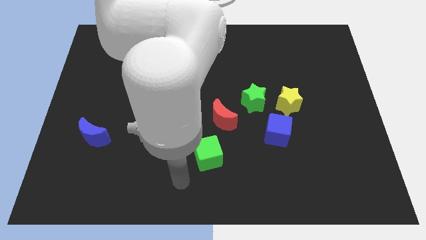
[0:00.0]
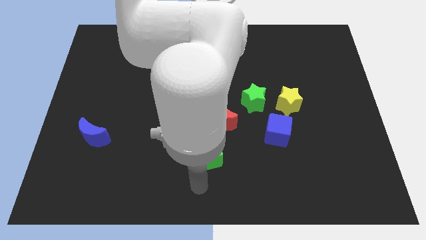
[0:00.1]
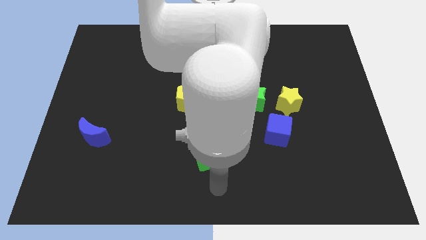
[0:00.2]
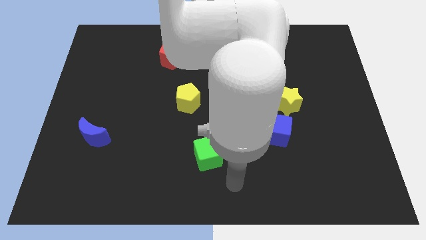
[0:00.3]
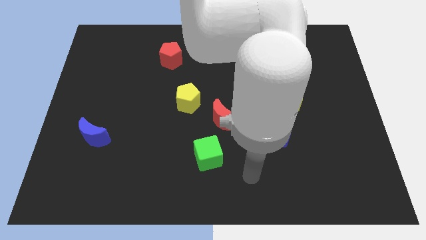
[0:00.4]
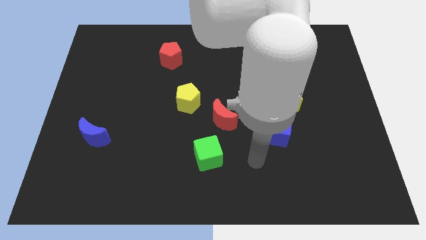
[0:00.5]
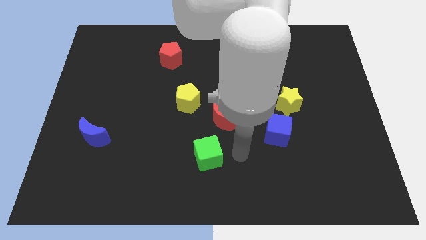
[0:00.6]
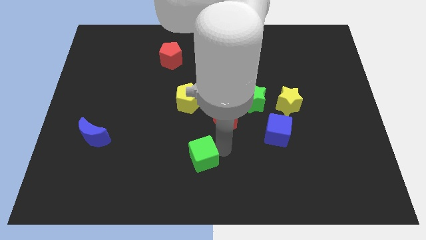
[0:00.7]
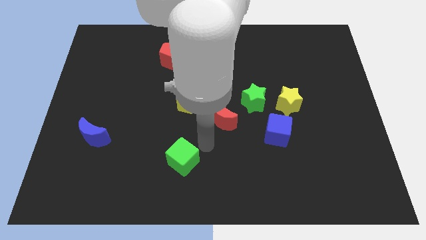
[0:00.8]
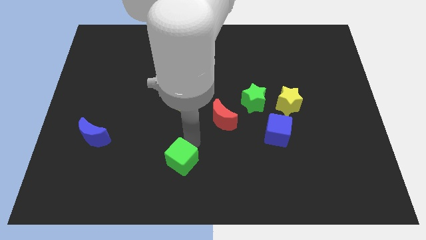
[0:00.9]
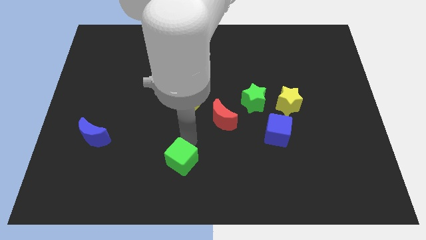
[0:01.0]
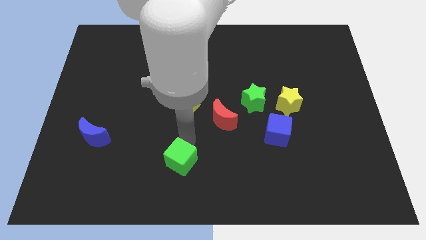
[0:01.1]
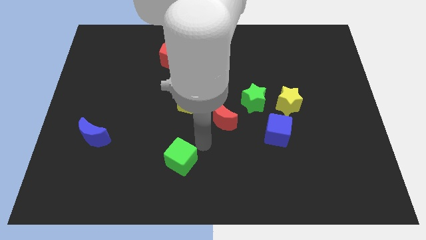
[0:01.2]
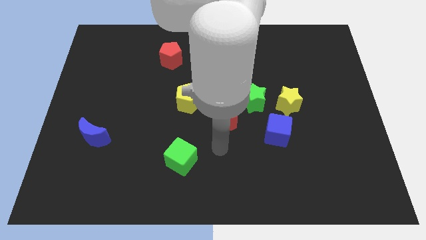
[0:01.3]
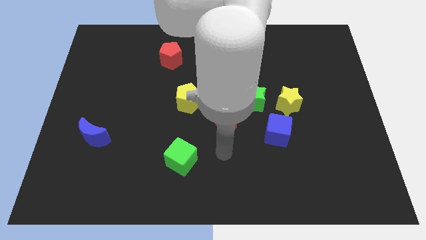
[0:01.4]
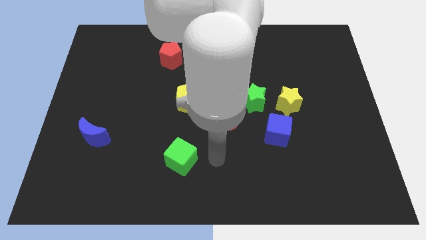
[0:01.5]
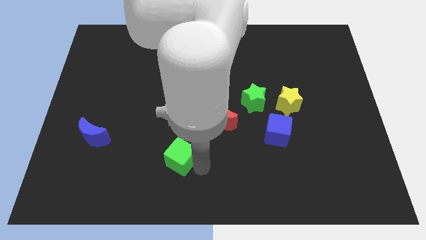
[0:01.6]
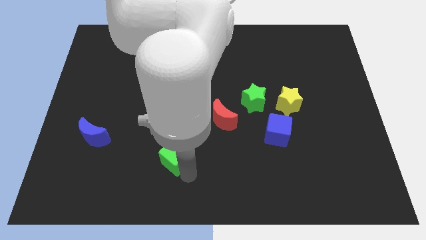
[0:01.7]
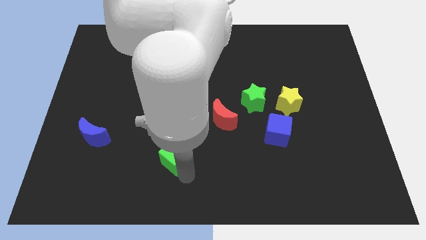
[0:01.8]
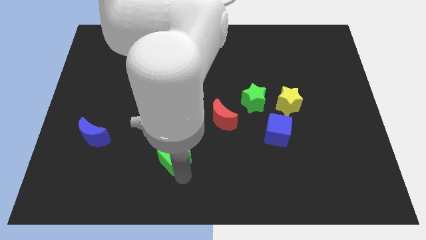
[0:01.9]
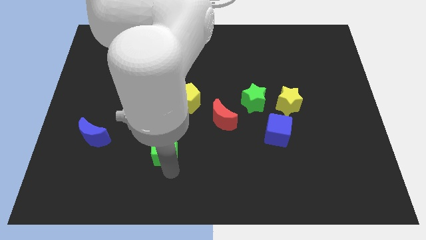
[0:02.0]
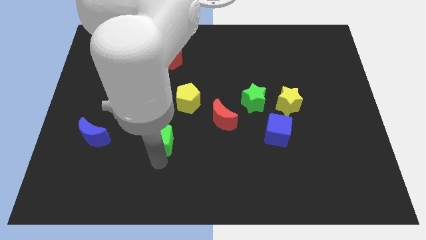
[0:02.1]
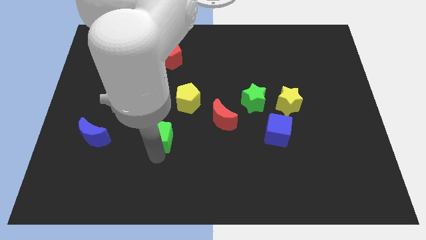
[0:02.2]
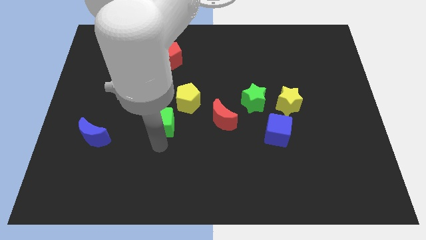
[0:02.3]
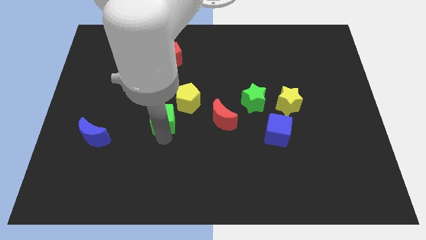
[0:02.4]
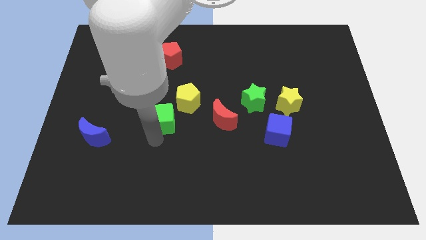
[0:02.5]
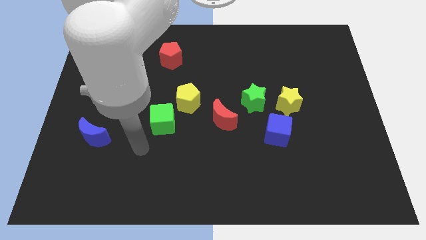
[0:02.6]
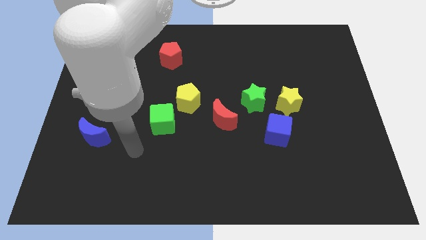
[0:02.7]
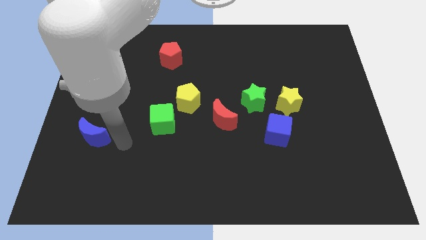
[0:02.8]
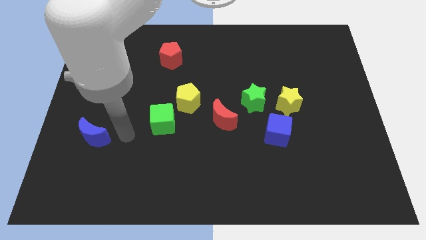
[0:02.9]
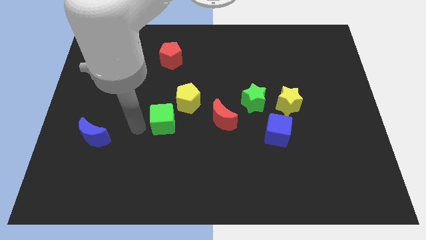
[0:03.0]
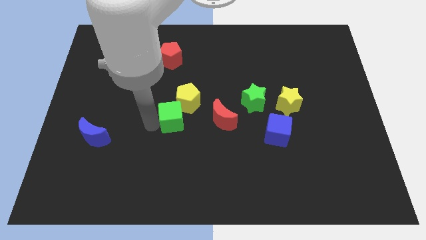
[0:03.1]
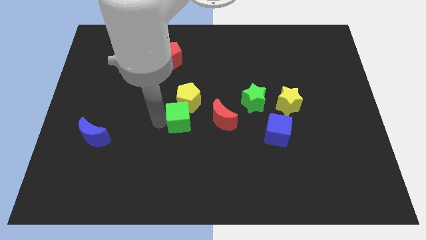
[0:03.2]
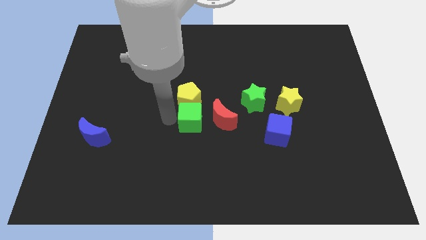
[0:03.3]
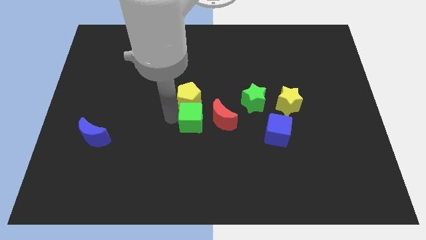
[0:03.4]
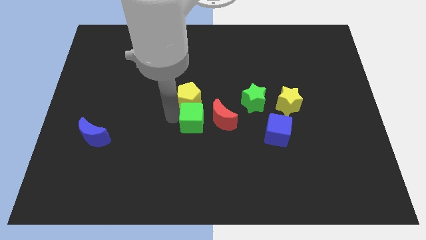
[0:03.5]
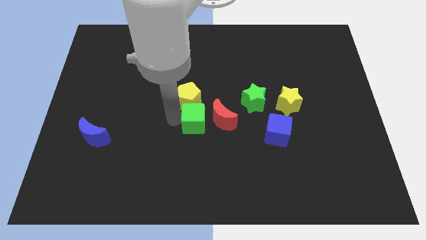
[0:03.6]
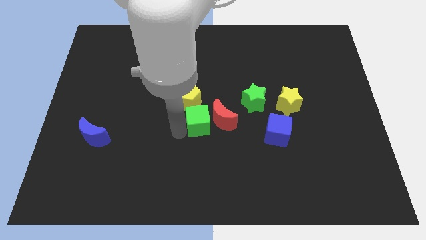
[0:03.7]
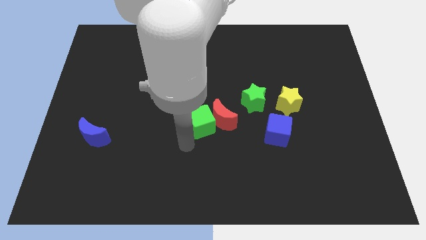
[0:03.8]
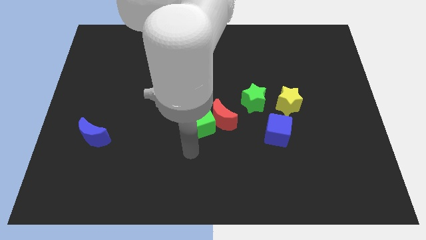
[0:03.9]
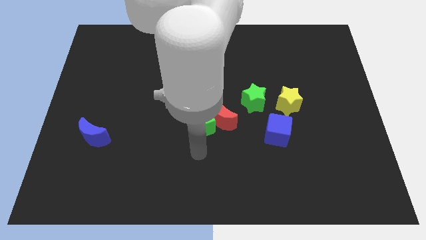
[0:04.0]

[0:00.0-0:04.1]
move the green cube to the left of the red crescent

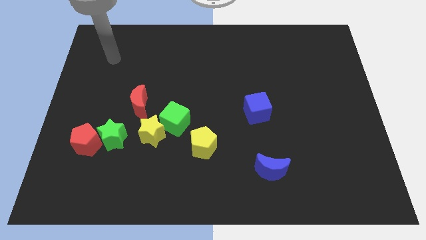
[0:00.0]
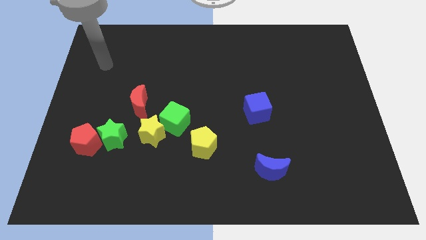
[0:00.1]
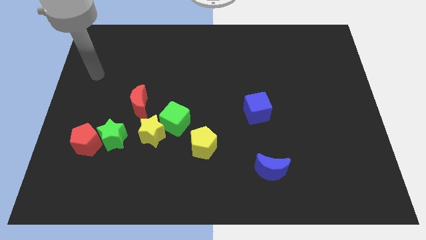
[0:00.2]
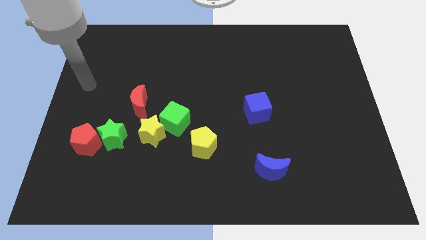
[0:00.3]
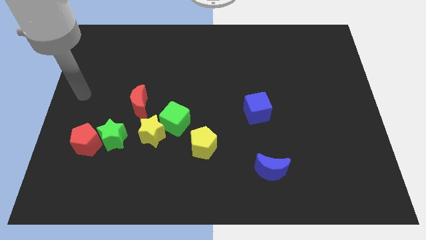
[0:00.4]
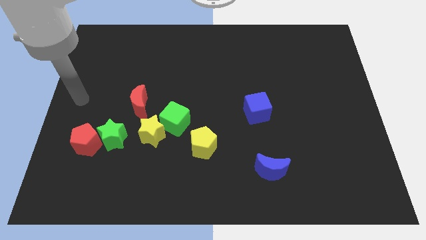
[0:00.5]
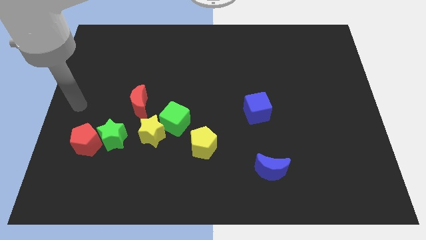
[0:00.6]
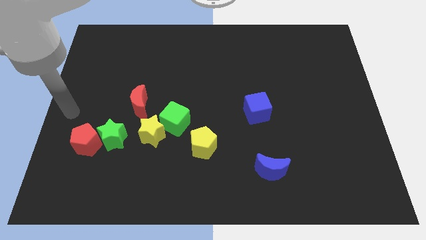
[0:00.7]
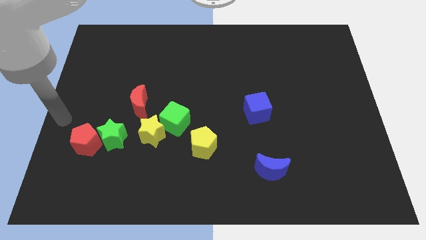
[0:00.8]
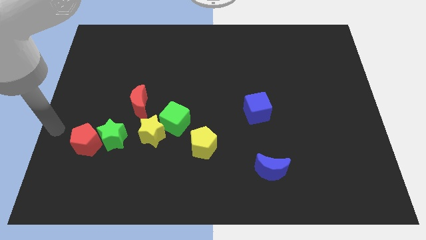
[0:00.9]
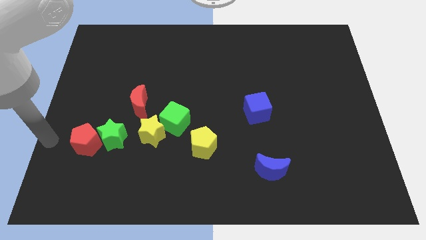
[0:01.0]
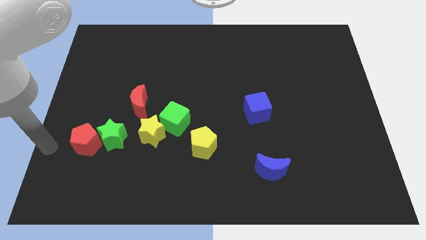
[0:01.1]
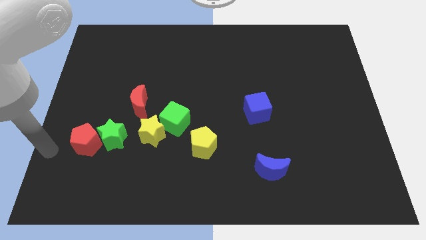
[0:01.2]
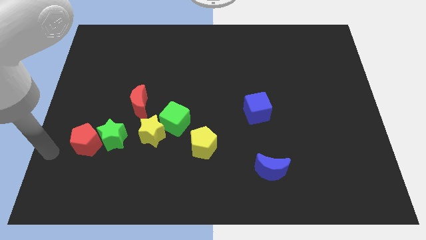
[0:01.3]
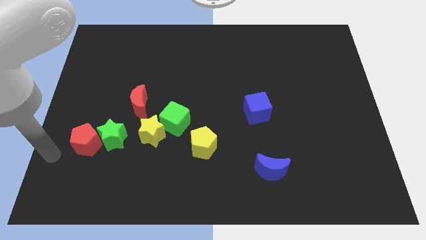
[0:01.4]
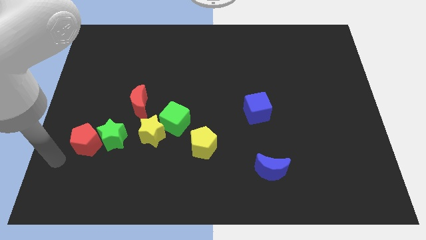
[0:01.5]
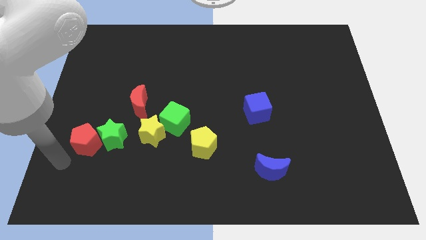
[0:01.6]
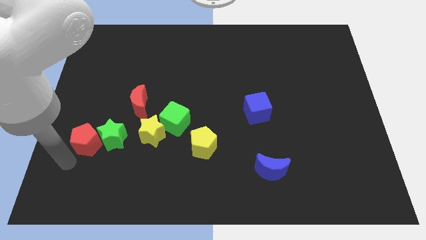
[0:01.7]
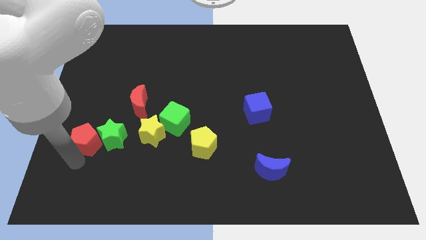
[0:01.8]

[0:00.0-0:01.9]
move your arm towards the red pentagon

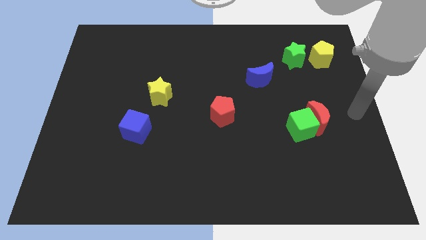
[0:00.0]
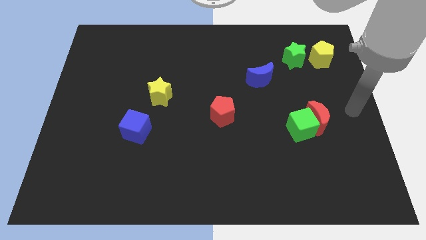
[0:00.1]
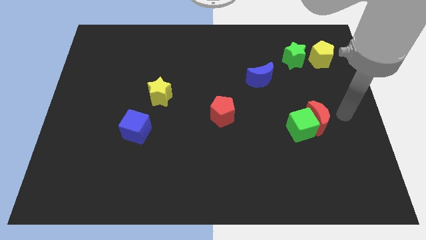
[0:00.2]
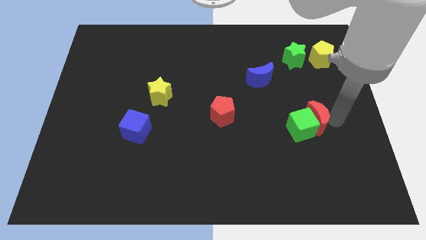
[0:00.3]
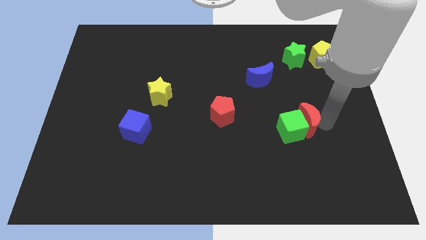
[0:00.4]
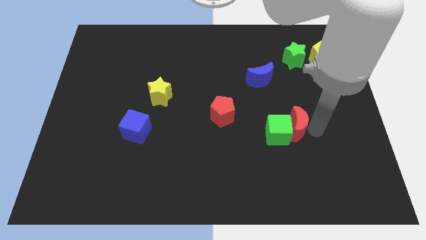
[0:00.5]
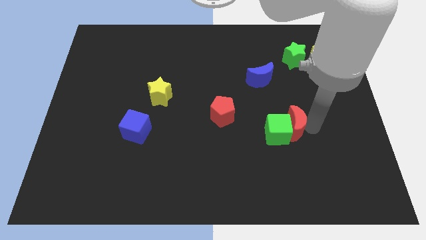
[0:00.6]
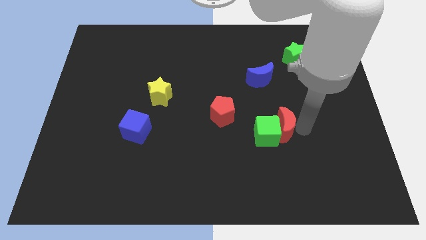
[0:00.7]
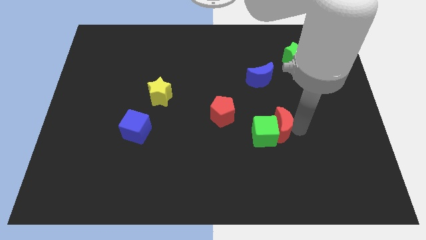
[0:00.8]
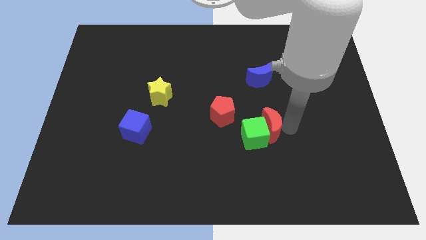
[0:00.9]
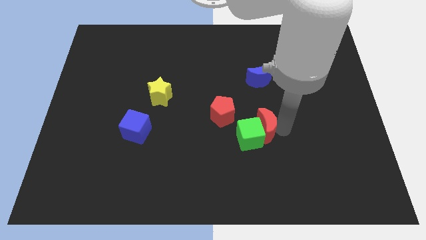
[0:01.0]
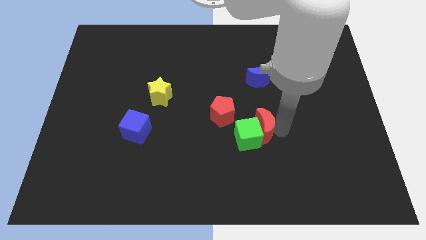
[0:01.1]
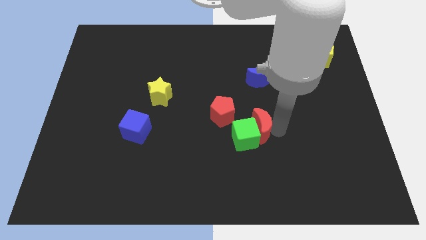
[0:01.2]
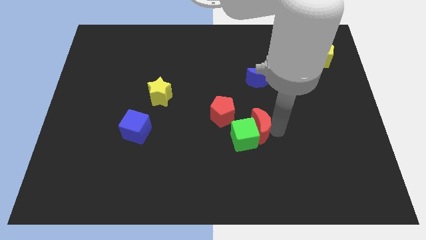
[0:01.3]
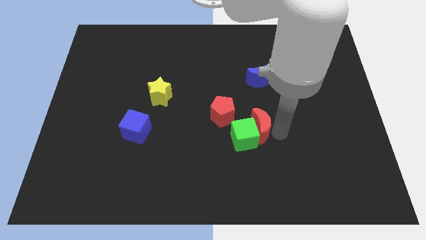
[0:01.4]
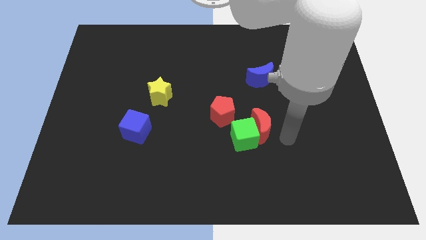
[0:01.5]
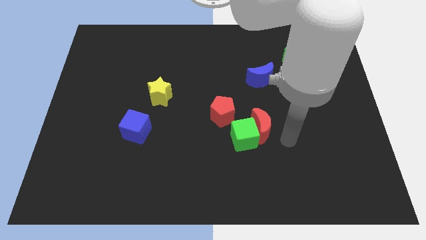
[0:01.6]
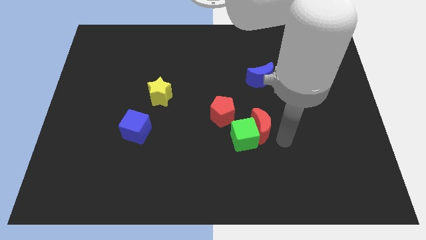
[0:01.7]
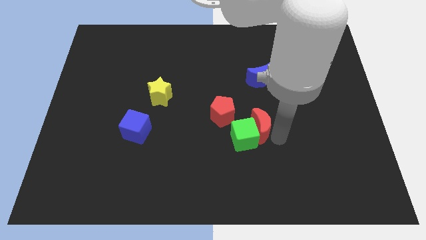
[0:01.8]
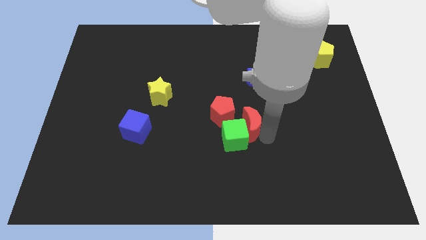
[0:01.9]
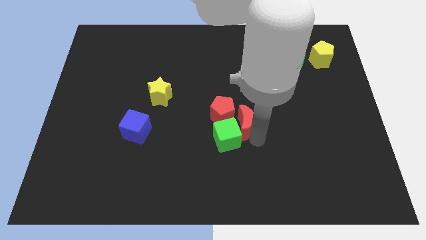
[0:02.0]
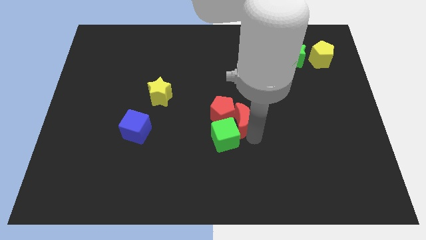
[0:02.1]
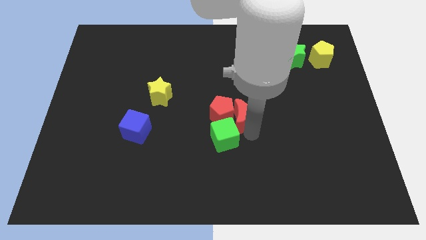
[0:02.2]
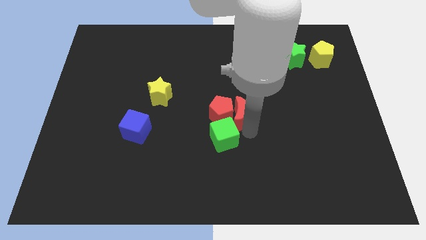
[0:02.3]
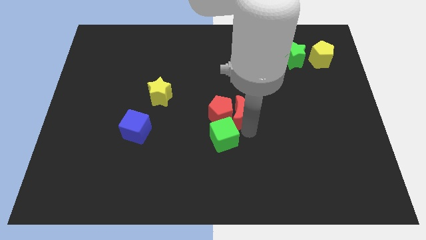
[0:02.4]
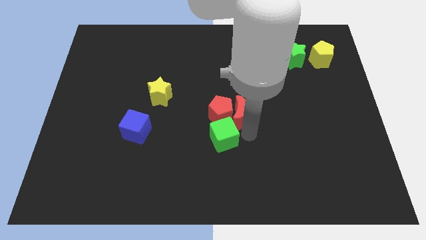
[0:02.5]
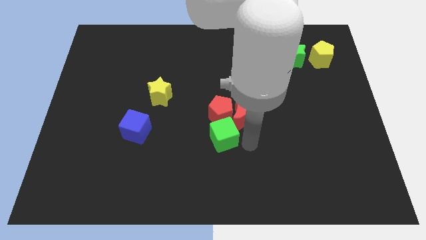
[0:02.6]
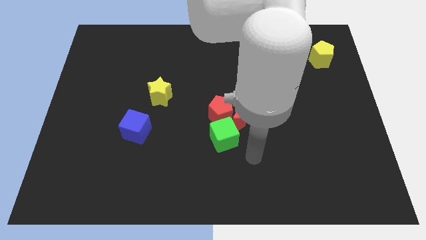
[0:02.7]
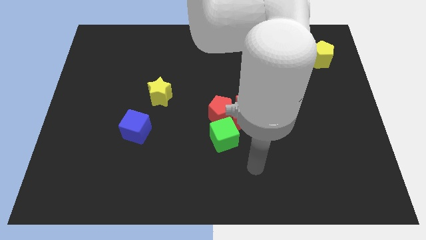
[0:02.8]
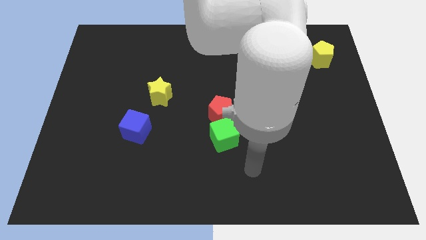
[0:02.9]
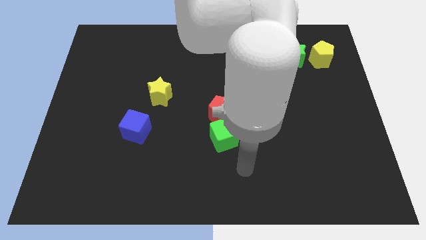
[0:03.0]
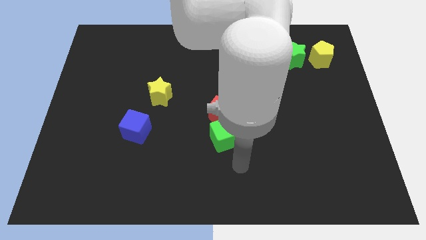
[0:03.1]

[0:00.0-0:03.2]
push the green cube to the bottom of the red pentagon with red crescent
